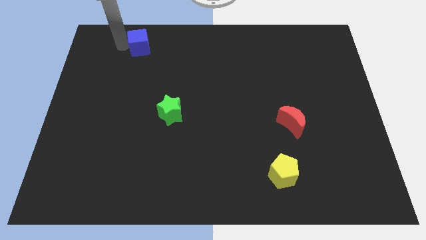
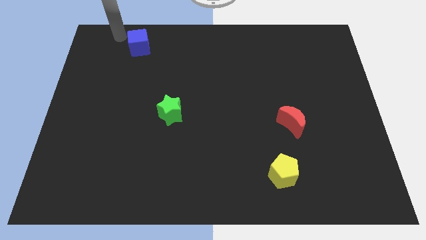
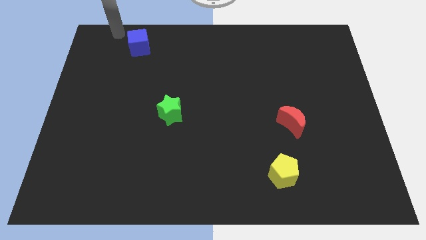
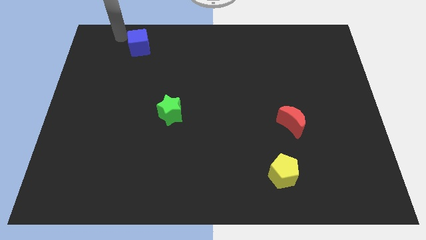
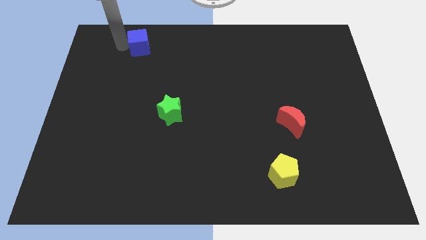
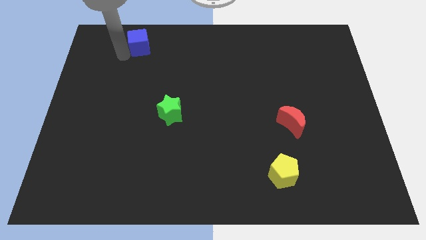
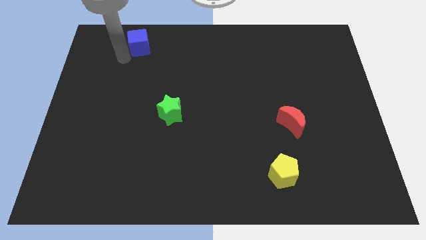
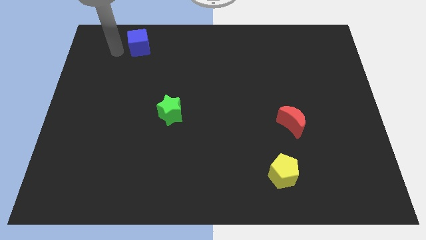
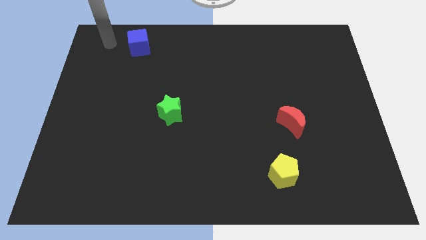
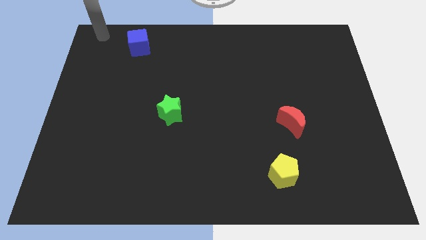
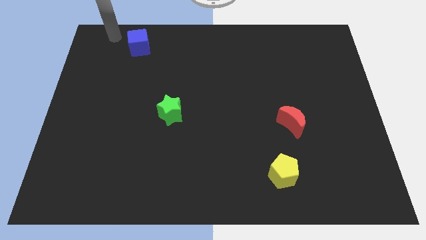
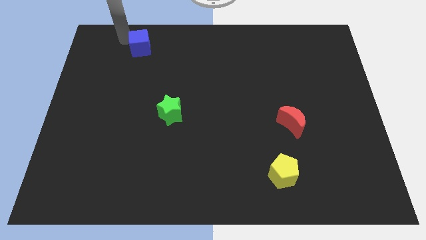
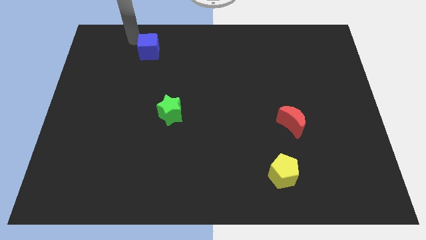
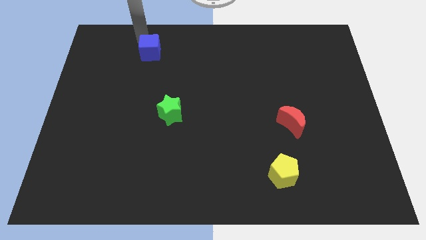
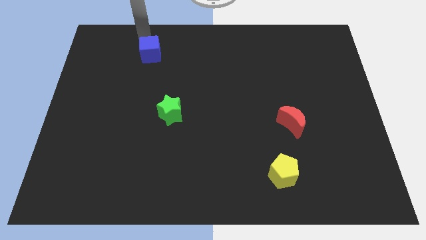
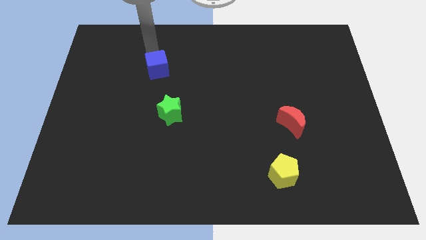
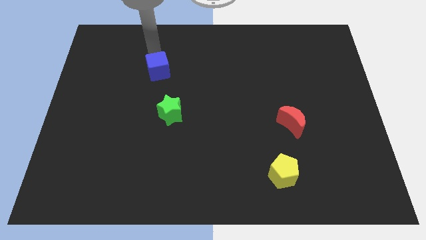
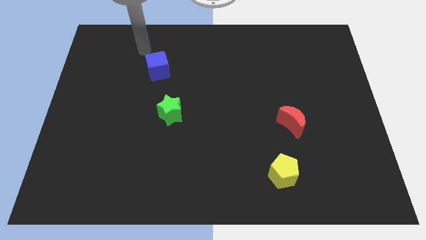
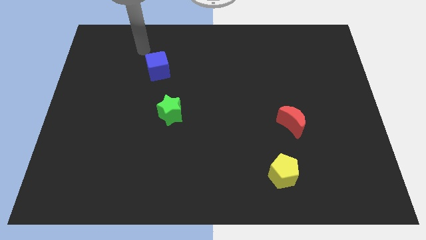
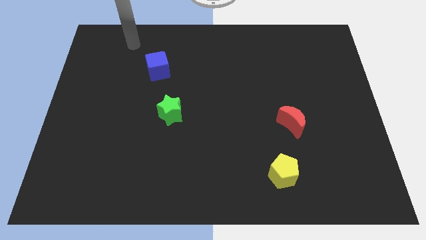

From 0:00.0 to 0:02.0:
push the cube towards the star

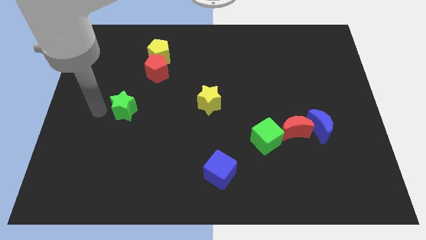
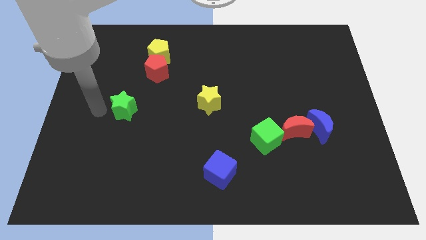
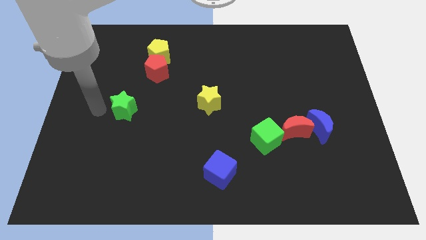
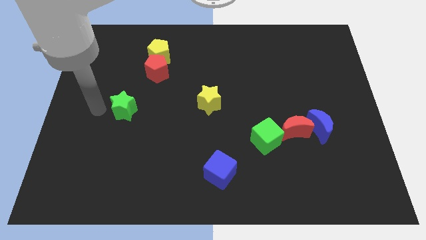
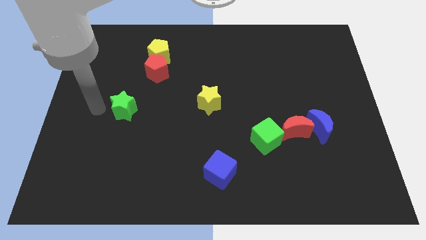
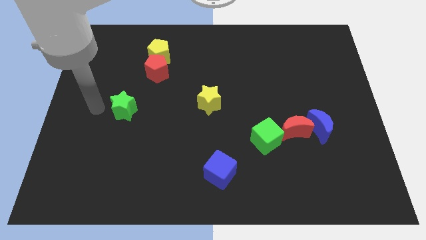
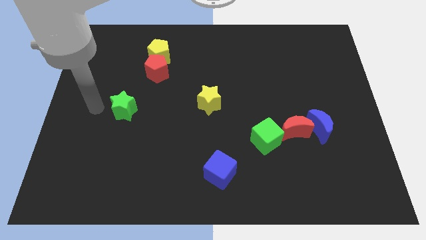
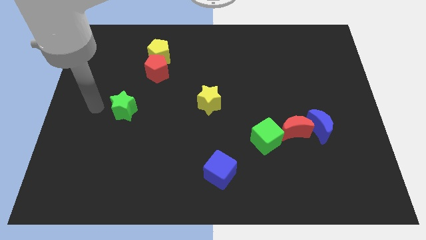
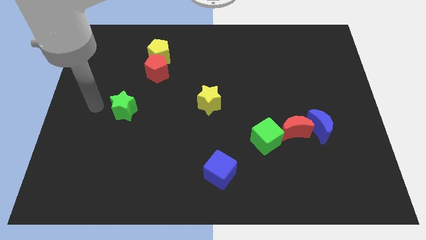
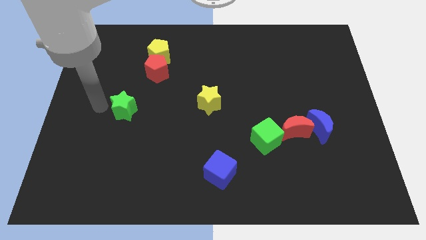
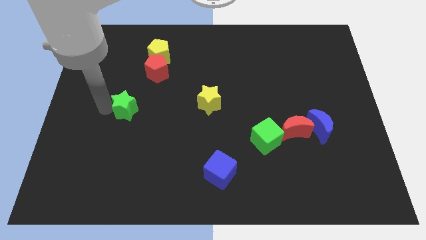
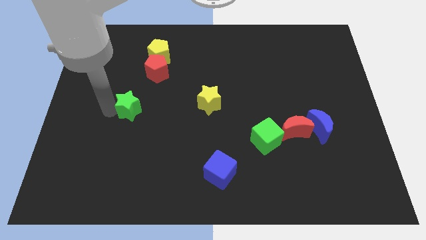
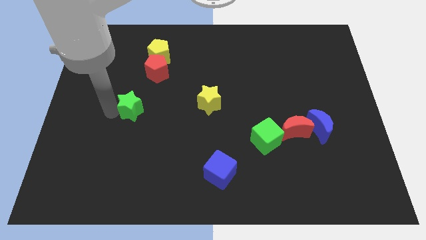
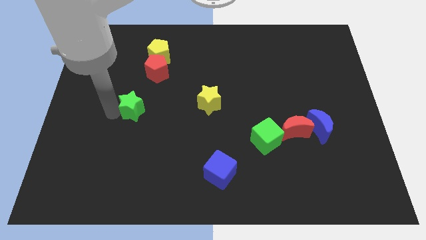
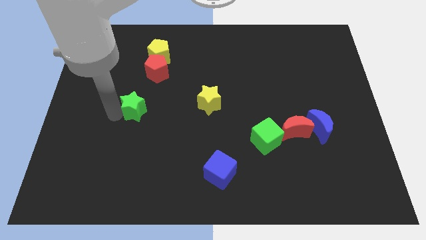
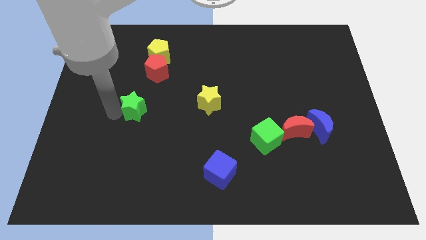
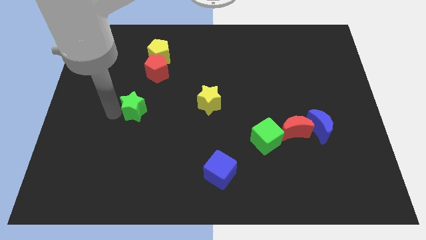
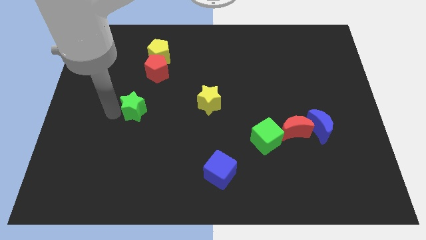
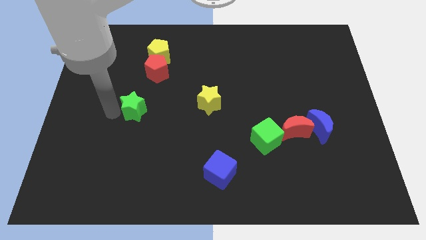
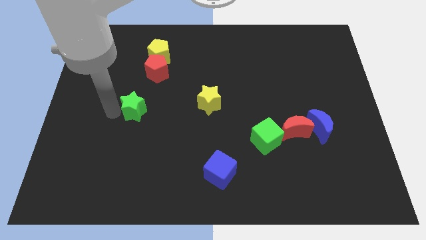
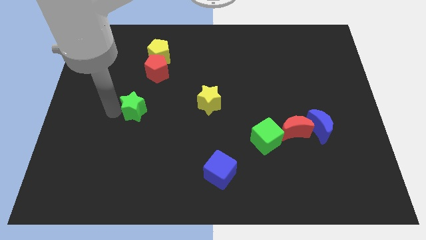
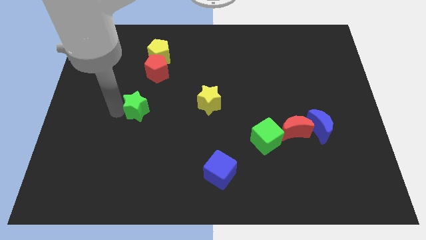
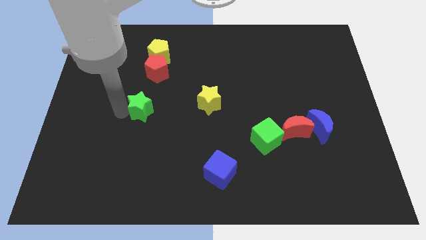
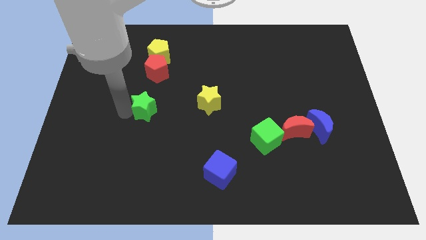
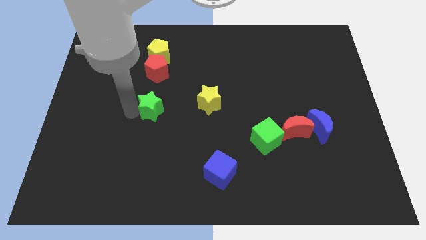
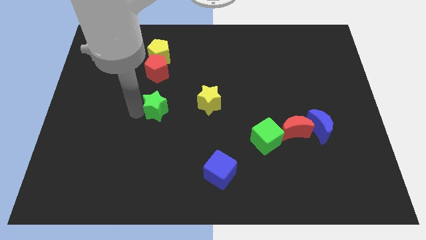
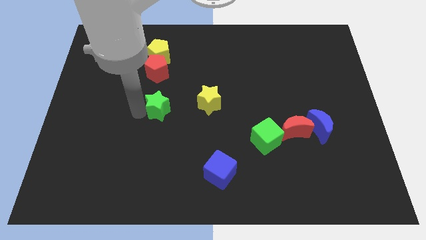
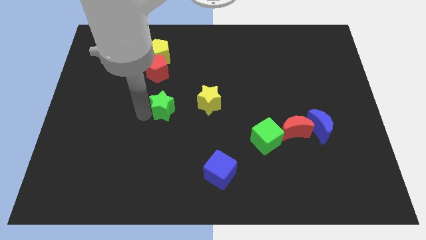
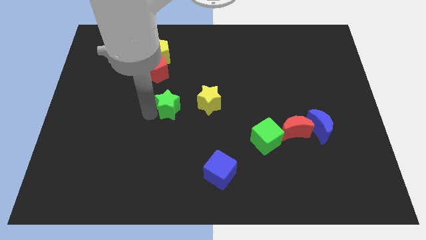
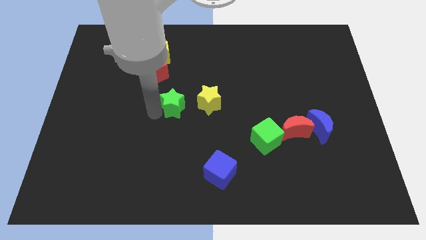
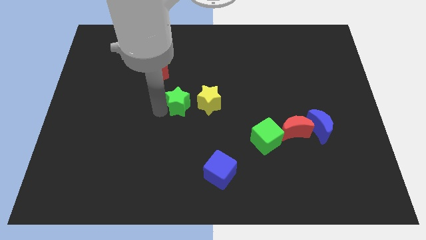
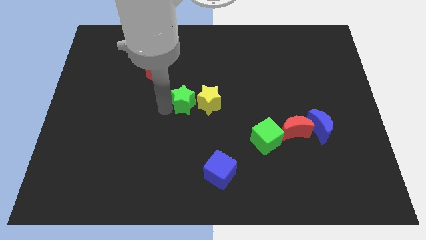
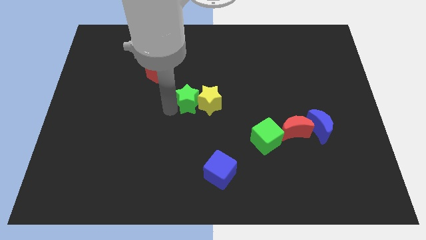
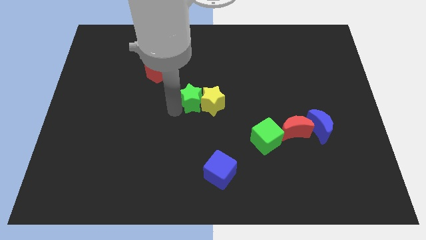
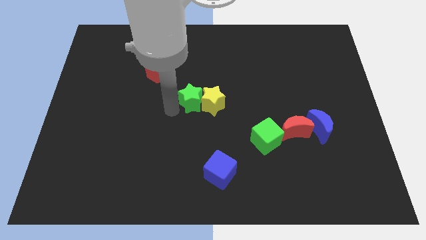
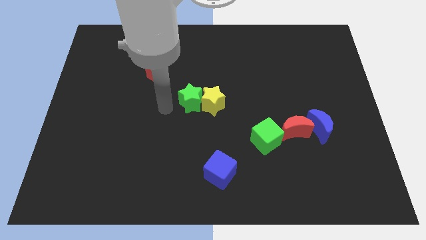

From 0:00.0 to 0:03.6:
push the green star into yellow star

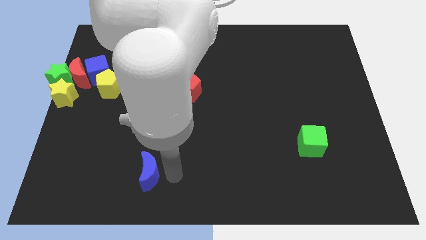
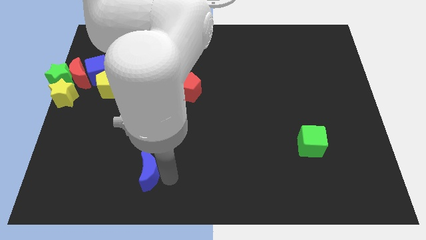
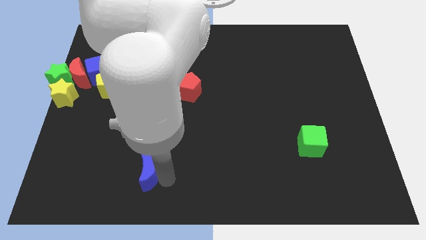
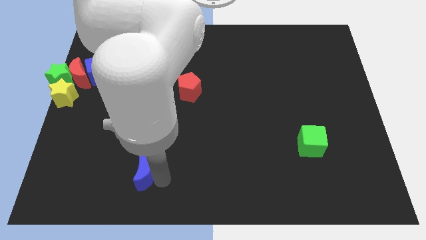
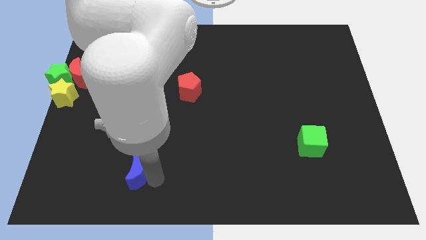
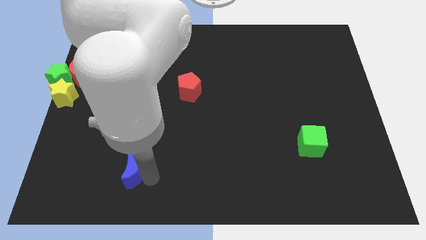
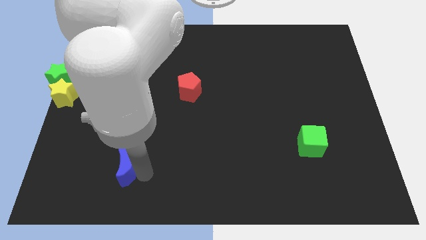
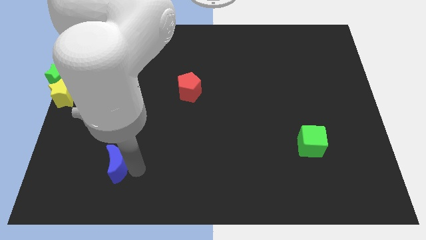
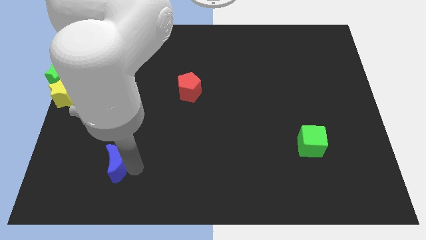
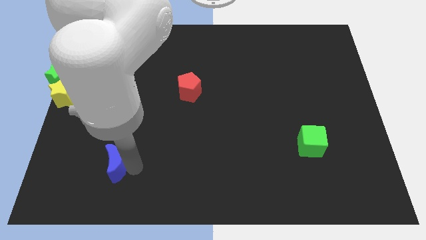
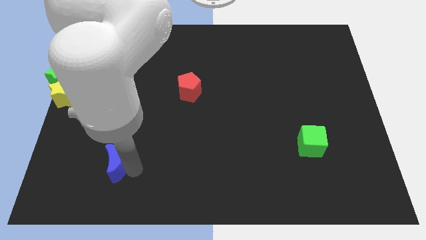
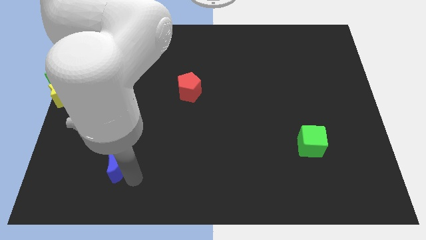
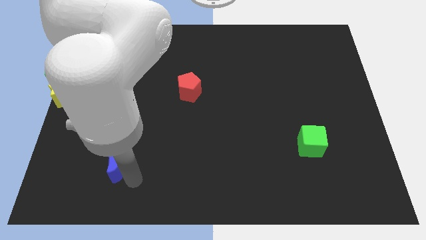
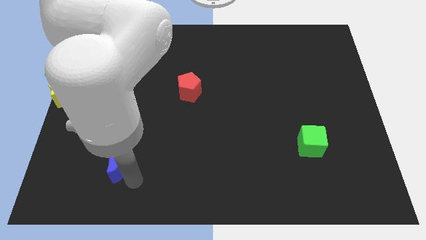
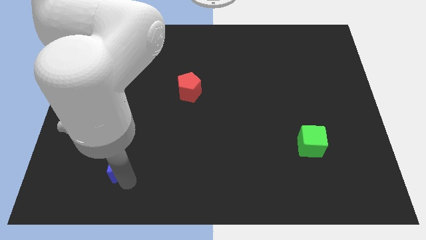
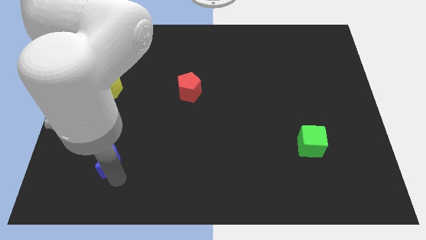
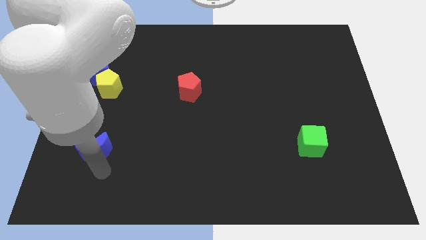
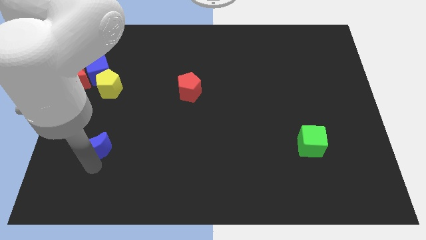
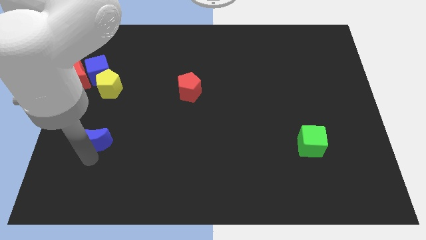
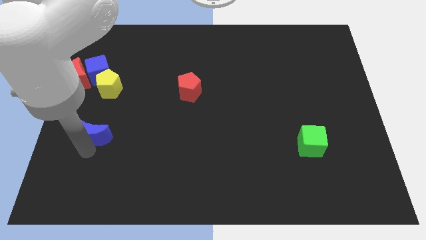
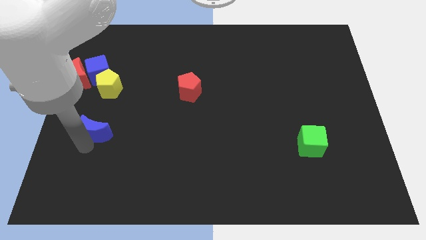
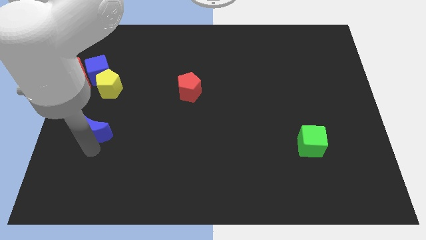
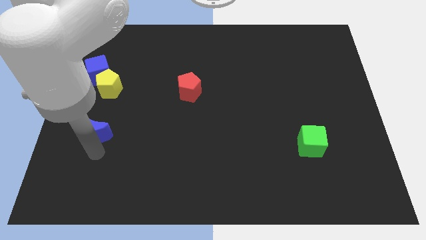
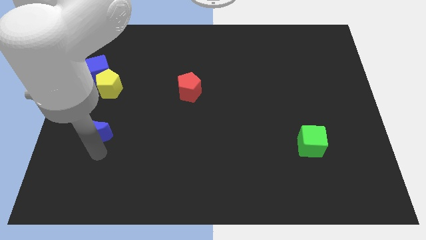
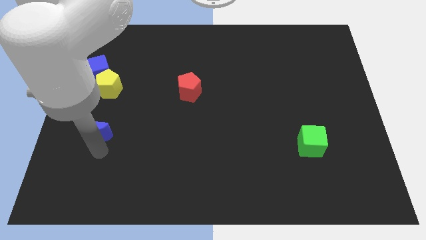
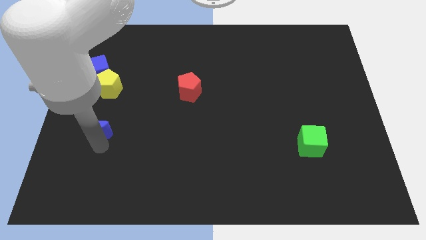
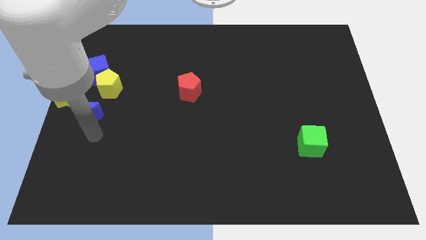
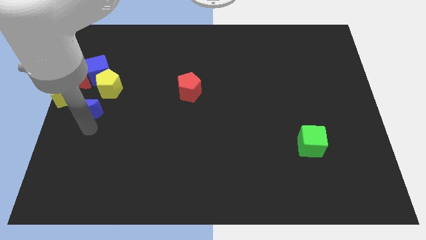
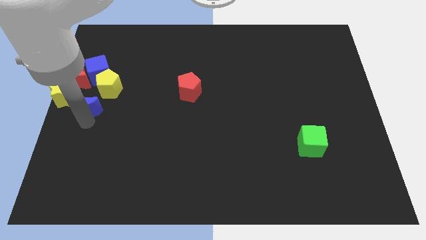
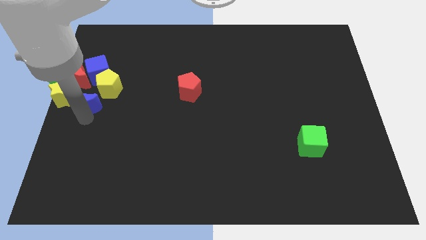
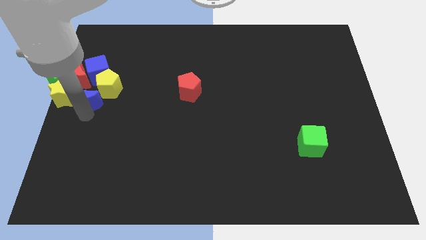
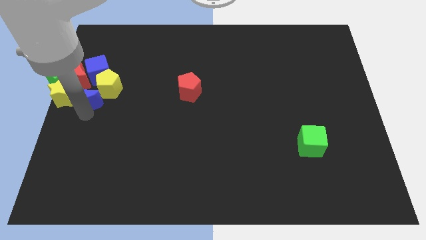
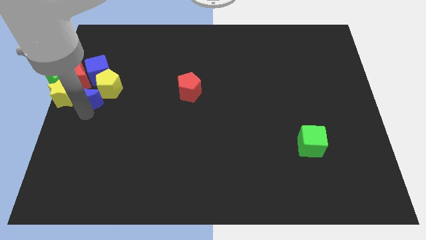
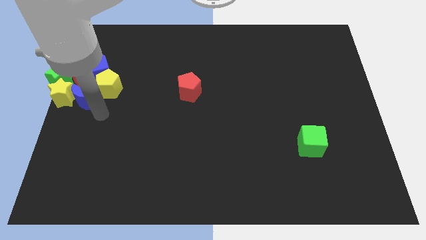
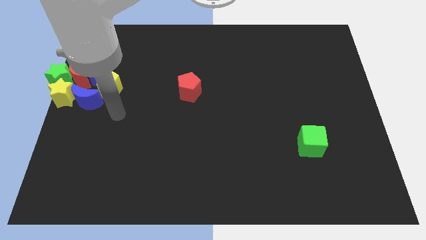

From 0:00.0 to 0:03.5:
place the blue crescent in between the yellow blocks
